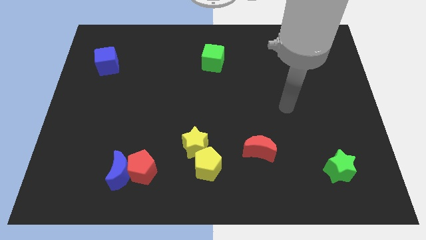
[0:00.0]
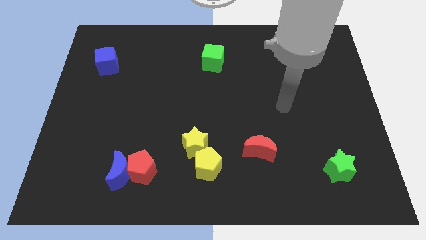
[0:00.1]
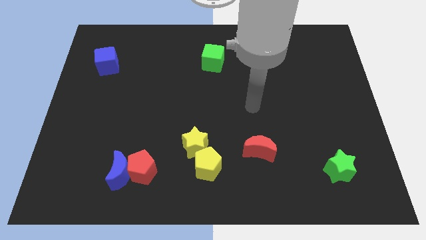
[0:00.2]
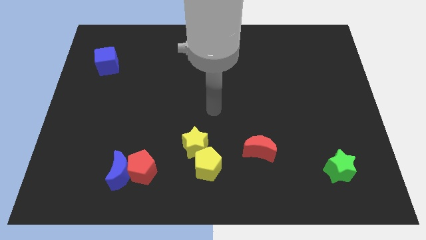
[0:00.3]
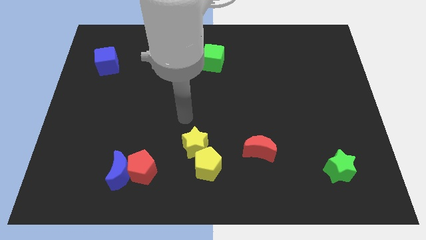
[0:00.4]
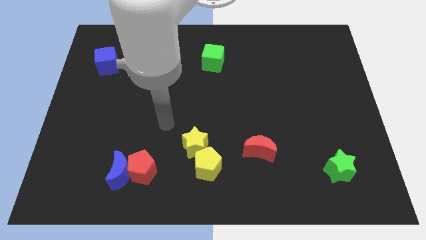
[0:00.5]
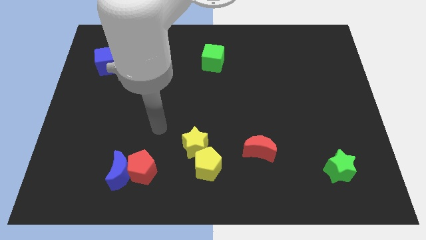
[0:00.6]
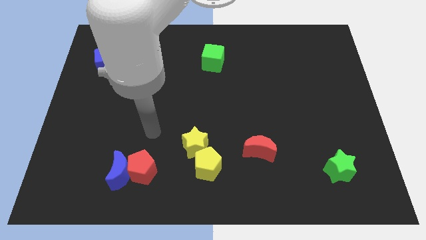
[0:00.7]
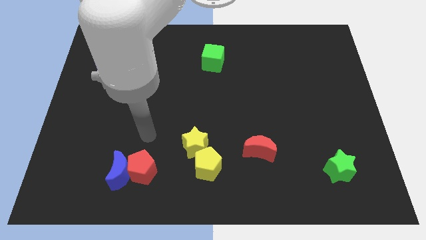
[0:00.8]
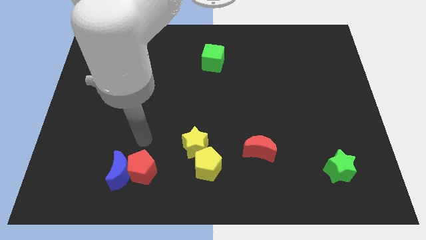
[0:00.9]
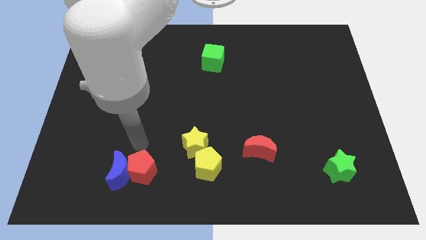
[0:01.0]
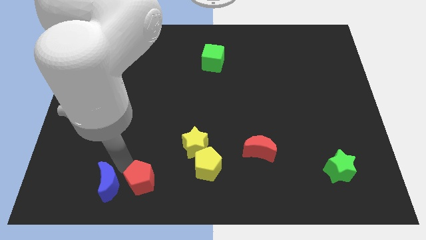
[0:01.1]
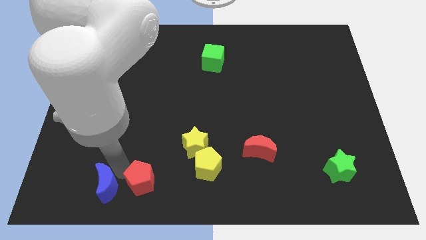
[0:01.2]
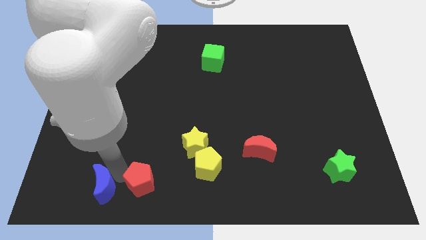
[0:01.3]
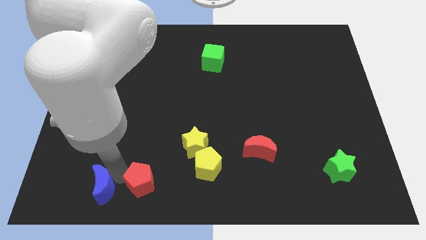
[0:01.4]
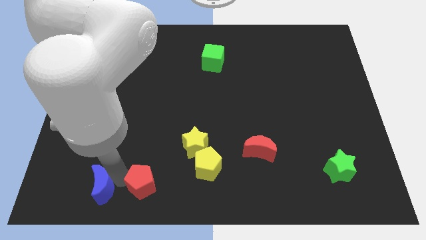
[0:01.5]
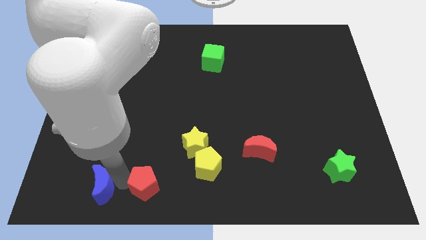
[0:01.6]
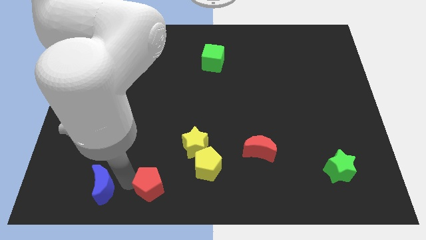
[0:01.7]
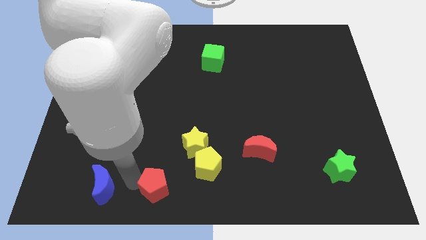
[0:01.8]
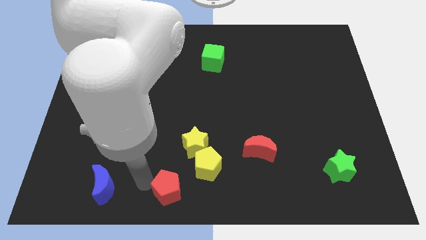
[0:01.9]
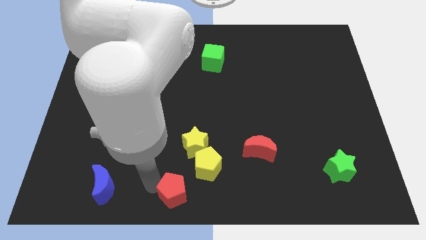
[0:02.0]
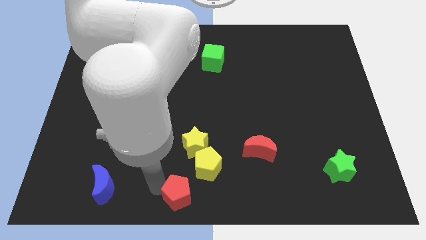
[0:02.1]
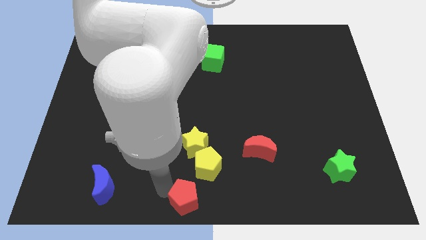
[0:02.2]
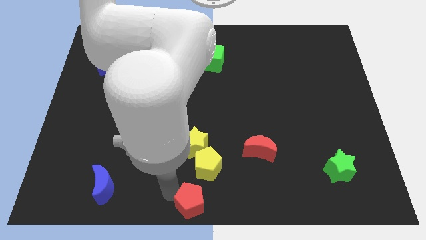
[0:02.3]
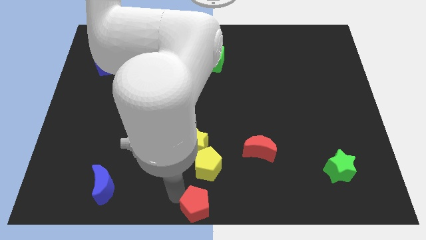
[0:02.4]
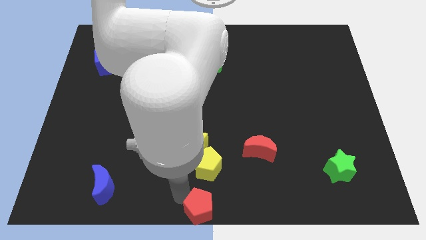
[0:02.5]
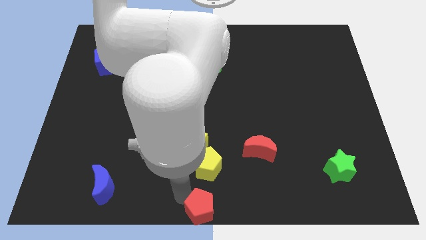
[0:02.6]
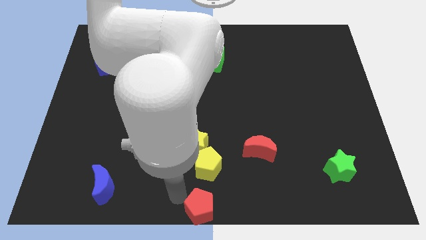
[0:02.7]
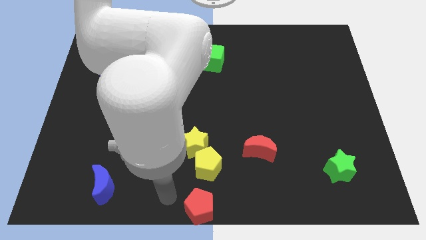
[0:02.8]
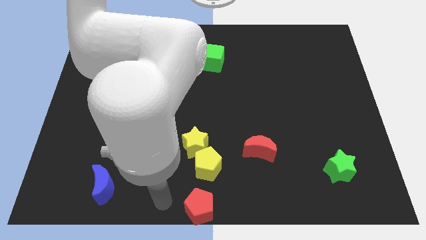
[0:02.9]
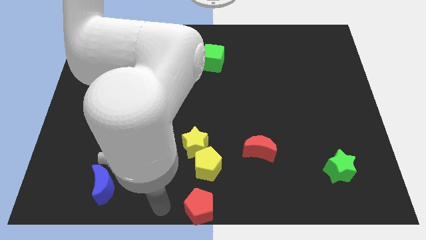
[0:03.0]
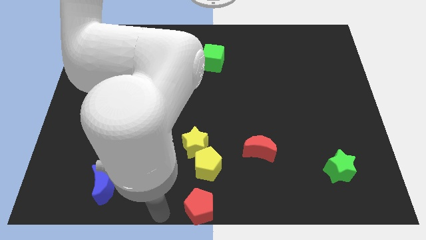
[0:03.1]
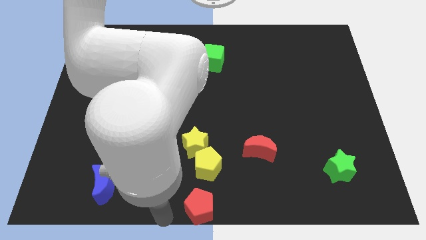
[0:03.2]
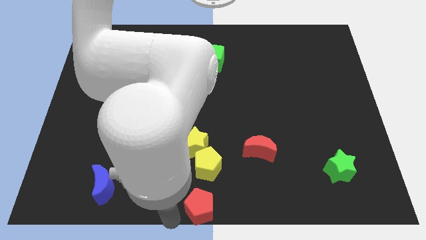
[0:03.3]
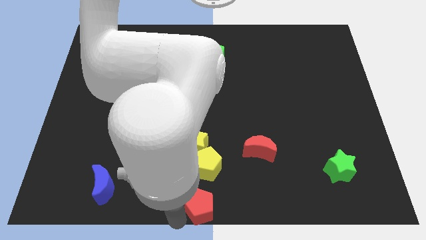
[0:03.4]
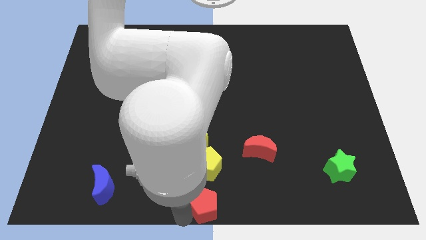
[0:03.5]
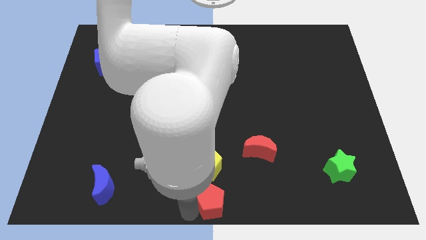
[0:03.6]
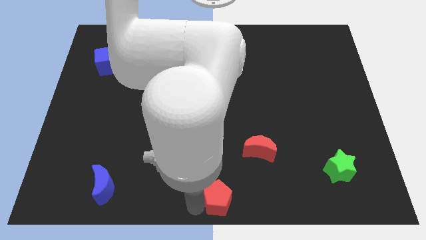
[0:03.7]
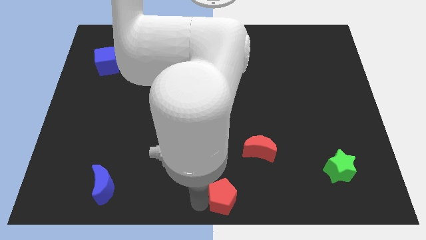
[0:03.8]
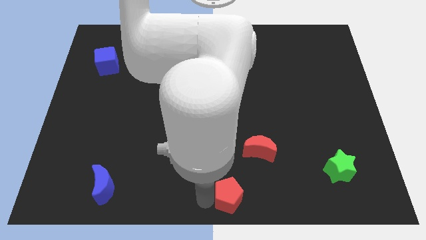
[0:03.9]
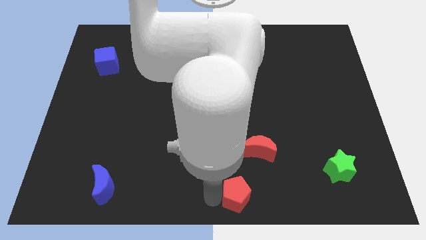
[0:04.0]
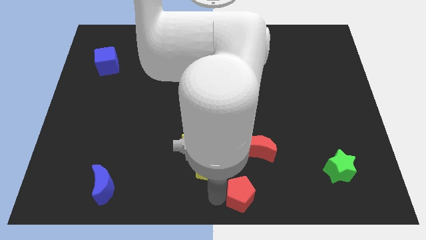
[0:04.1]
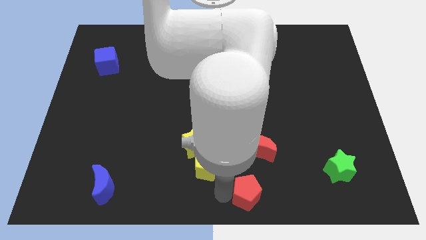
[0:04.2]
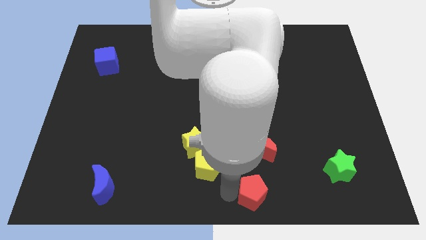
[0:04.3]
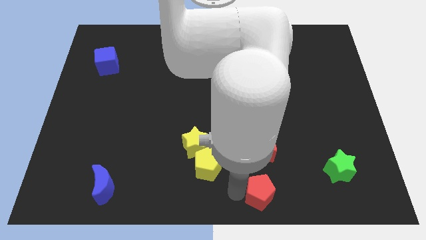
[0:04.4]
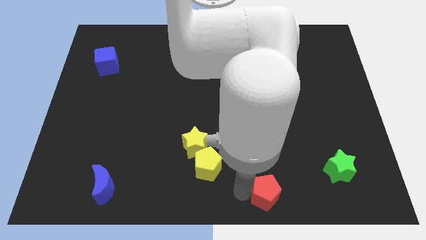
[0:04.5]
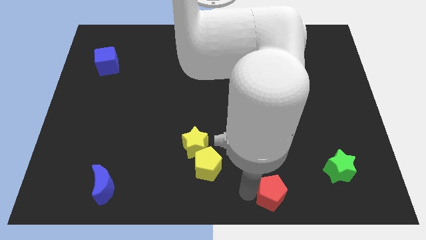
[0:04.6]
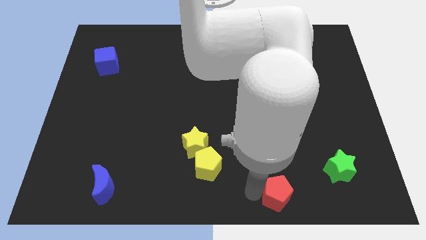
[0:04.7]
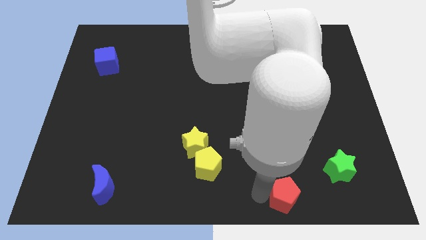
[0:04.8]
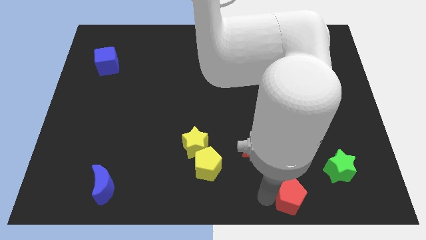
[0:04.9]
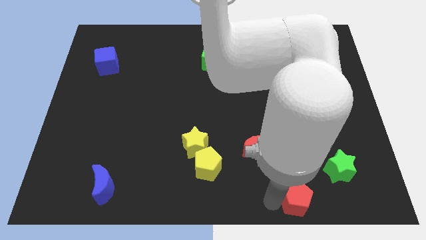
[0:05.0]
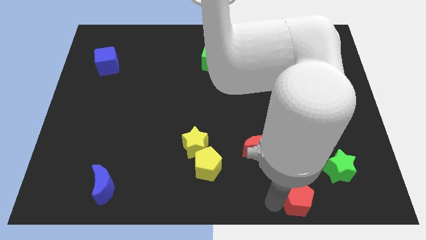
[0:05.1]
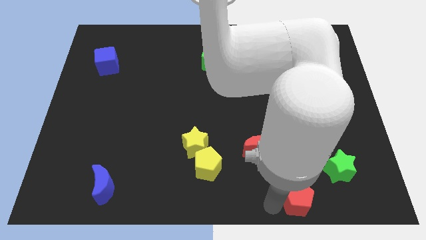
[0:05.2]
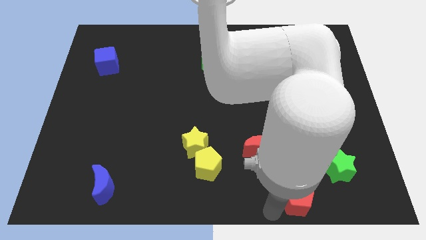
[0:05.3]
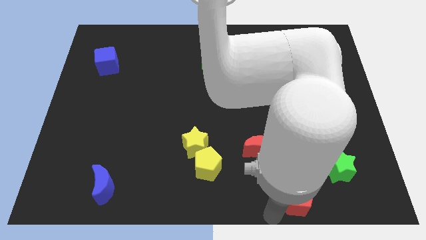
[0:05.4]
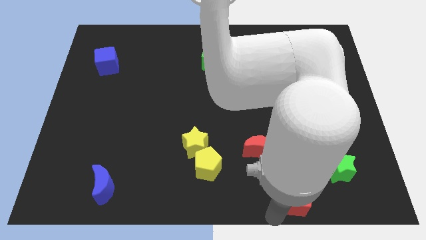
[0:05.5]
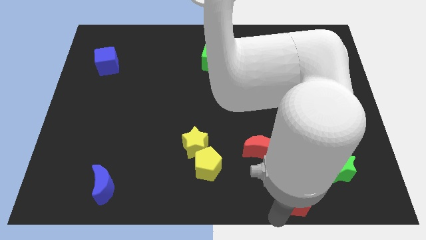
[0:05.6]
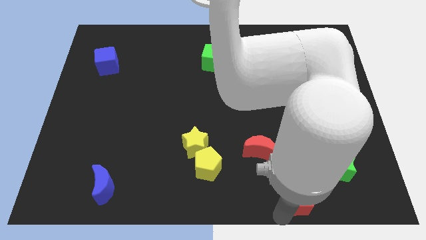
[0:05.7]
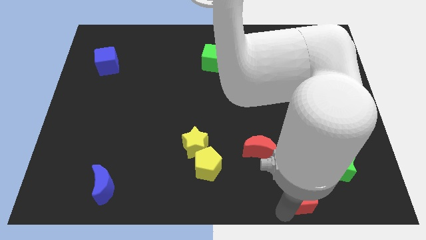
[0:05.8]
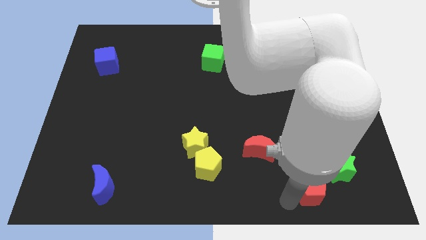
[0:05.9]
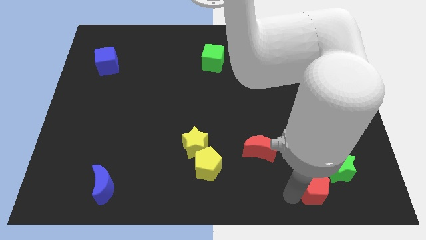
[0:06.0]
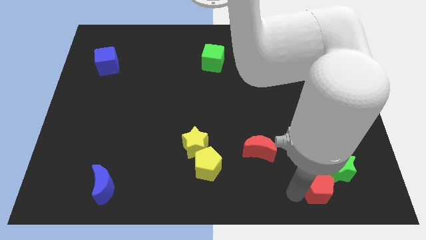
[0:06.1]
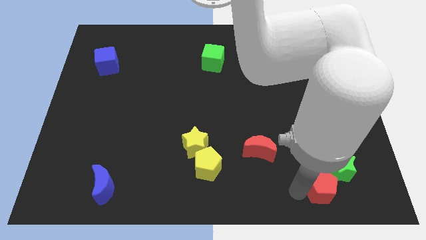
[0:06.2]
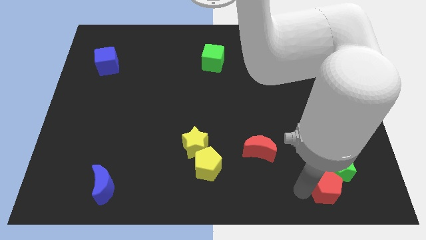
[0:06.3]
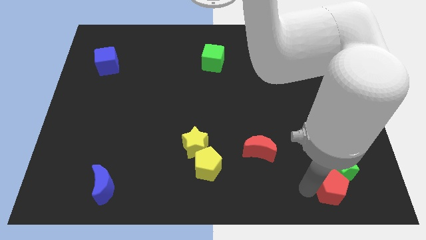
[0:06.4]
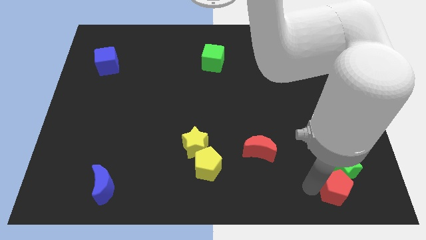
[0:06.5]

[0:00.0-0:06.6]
move the red pentagon towards the green star

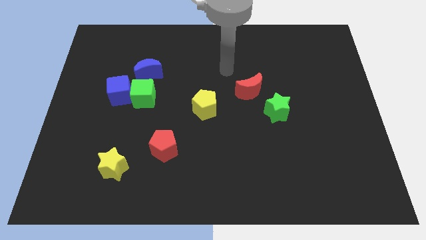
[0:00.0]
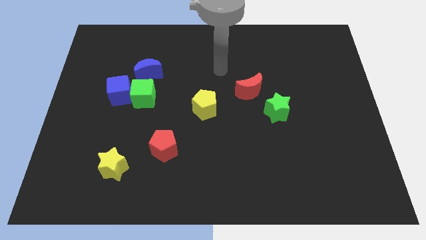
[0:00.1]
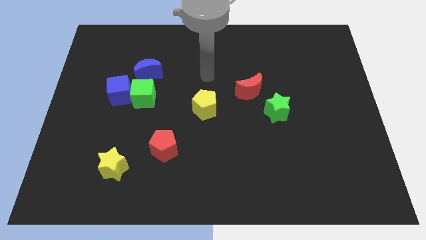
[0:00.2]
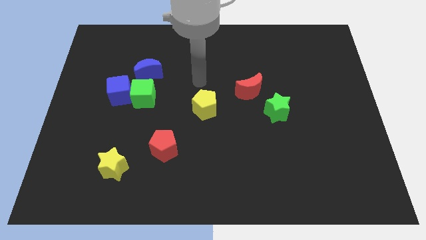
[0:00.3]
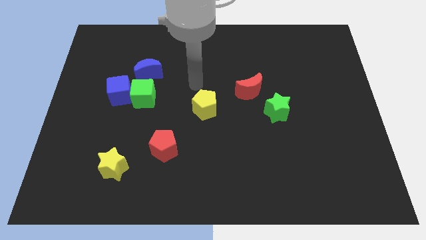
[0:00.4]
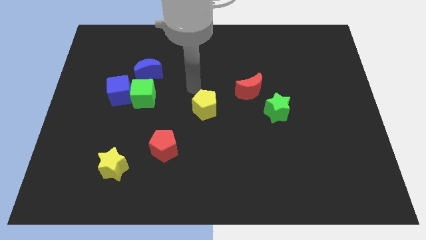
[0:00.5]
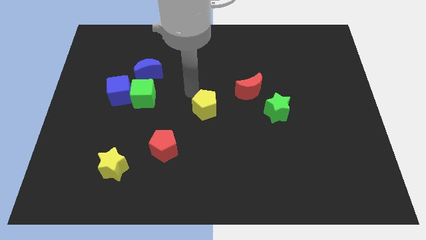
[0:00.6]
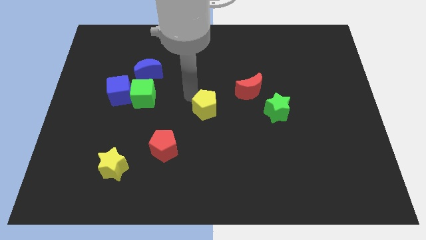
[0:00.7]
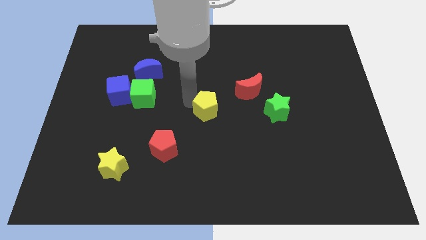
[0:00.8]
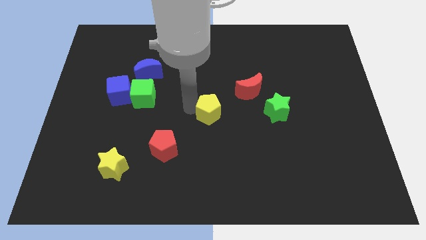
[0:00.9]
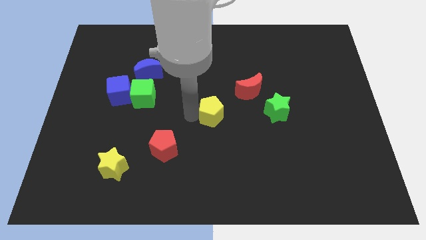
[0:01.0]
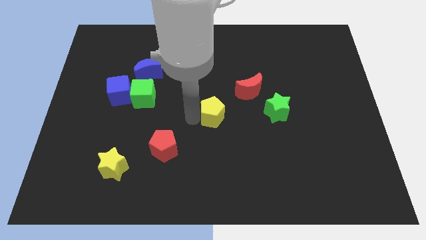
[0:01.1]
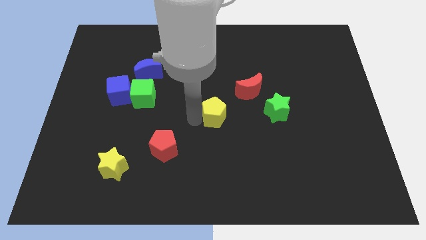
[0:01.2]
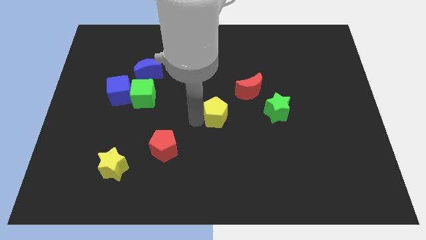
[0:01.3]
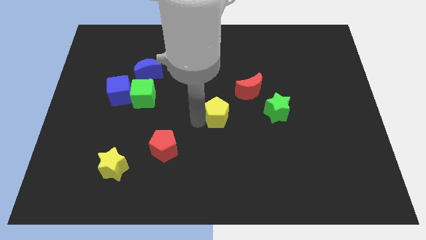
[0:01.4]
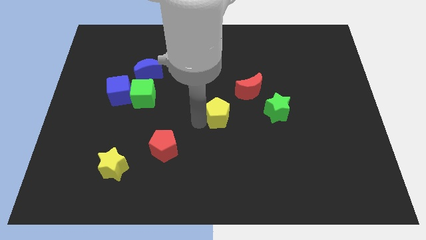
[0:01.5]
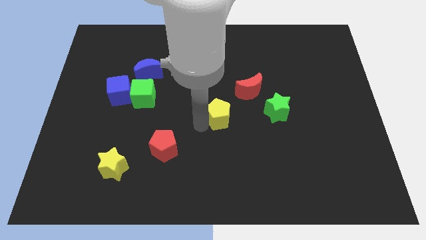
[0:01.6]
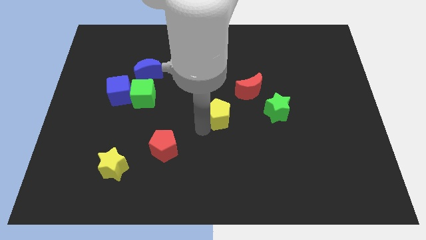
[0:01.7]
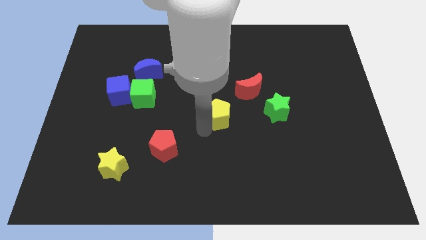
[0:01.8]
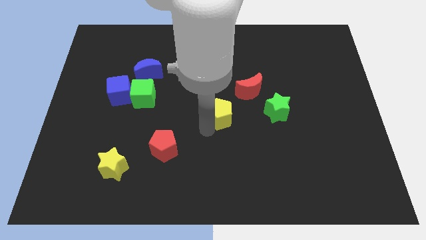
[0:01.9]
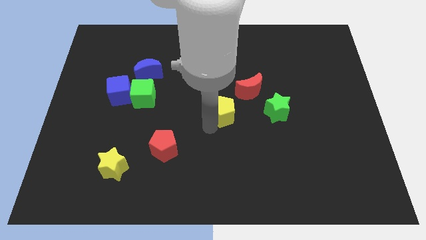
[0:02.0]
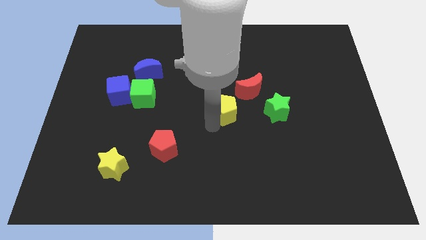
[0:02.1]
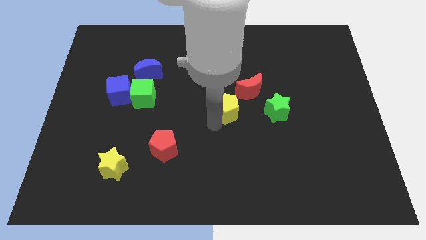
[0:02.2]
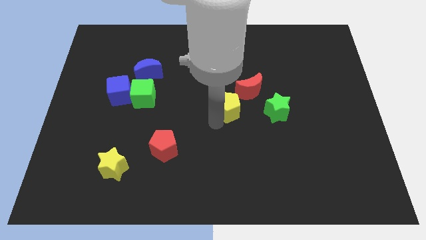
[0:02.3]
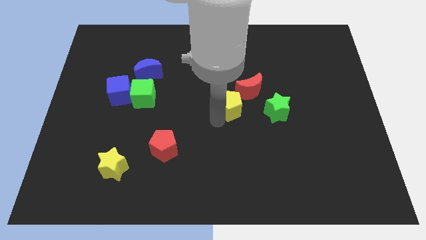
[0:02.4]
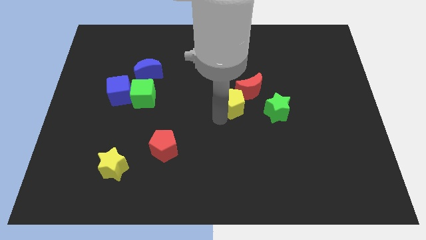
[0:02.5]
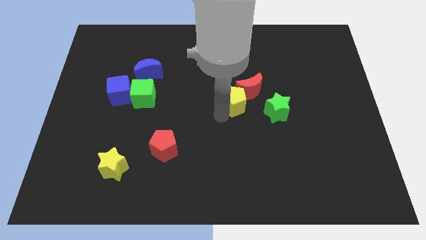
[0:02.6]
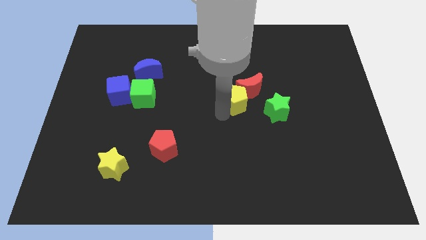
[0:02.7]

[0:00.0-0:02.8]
push the yellow pentagon towards the red moon
